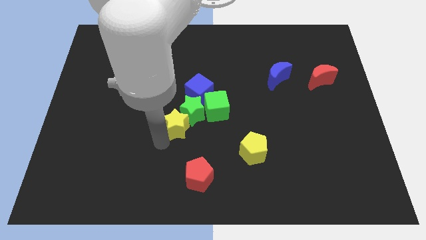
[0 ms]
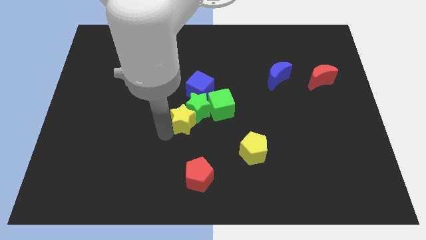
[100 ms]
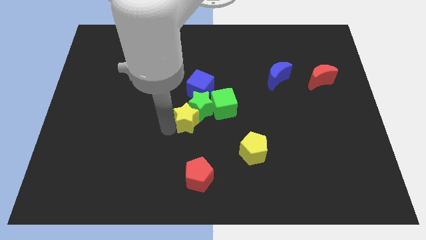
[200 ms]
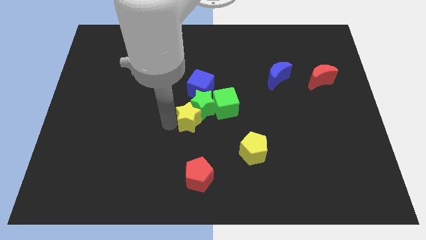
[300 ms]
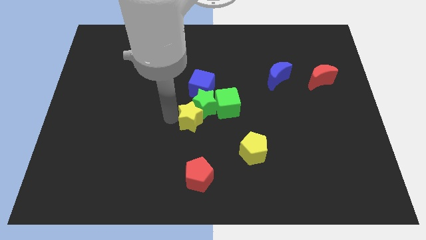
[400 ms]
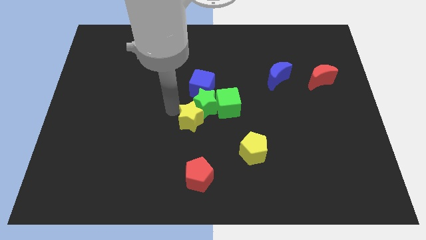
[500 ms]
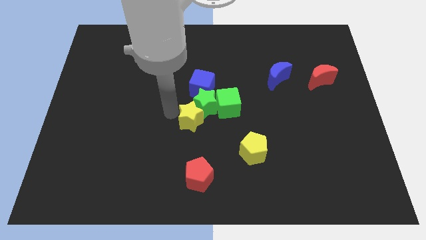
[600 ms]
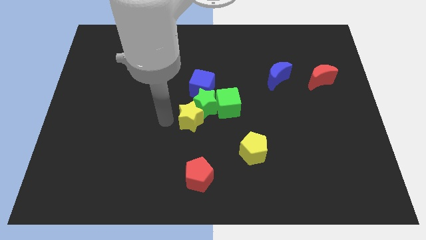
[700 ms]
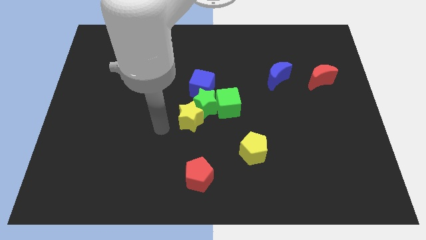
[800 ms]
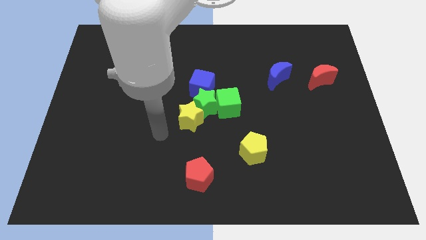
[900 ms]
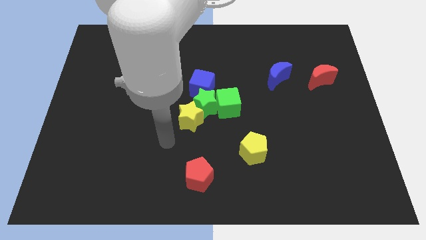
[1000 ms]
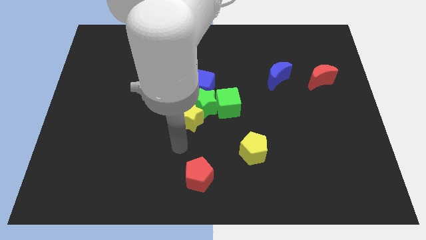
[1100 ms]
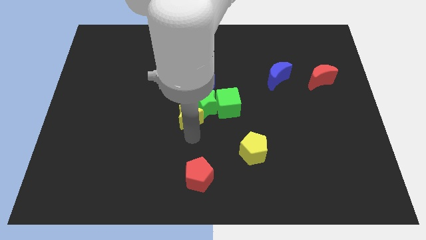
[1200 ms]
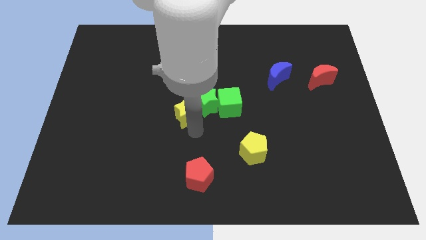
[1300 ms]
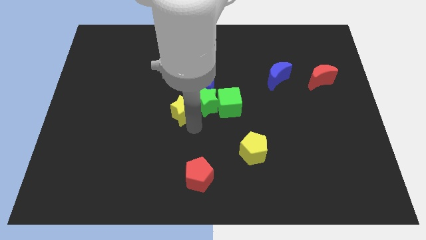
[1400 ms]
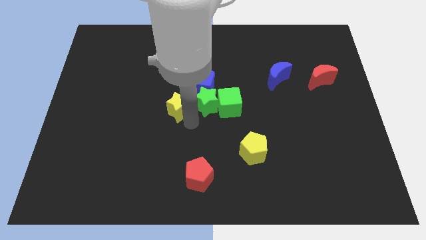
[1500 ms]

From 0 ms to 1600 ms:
push yellow star slightly upwards

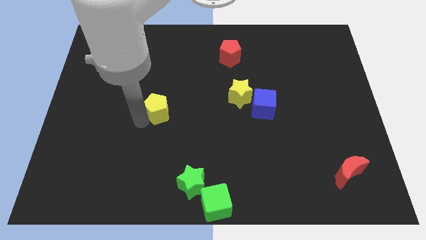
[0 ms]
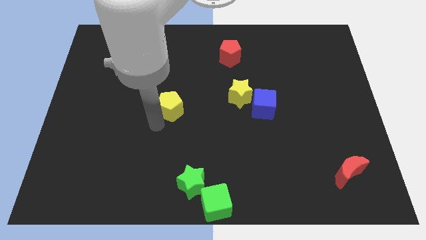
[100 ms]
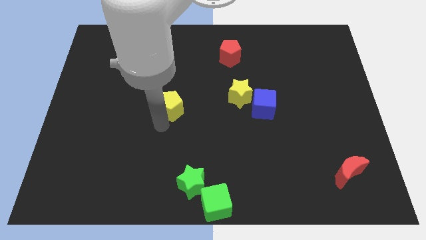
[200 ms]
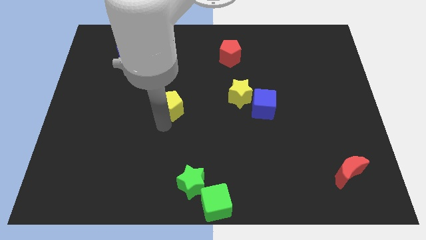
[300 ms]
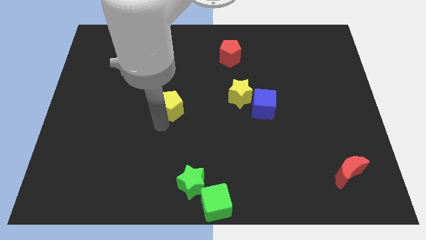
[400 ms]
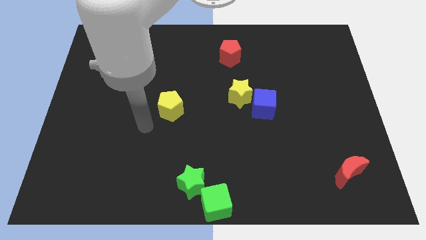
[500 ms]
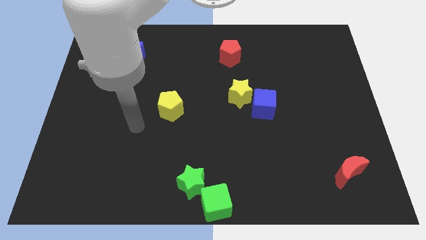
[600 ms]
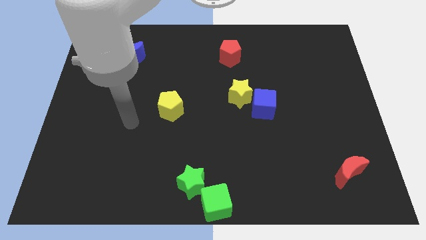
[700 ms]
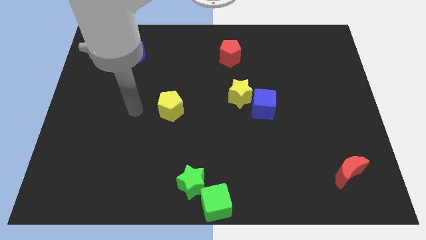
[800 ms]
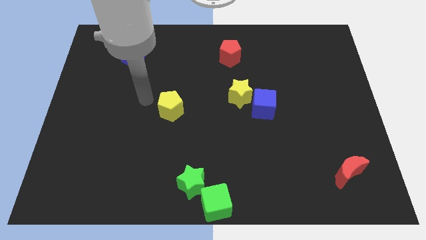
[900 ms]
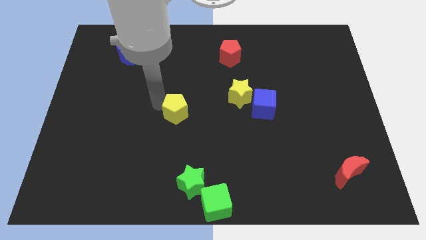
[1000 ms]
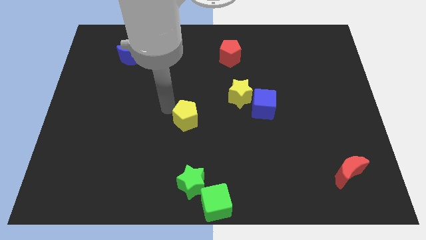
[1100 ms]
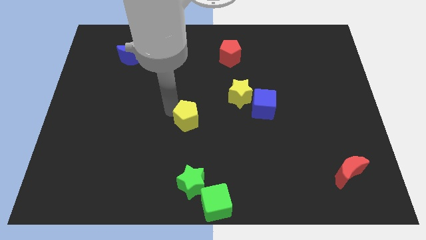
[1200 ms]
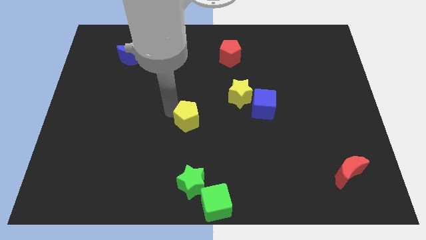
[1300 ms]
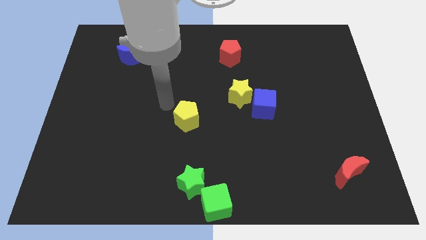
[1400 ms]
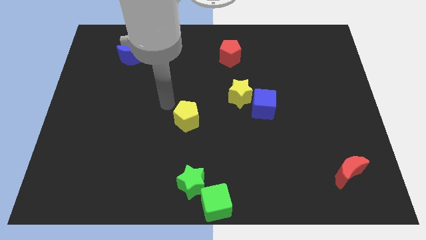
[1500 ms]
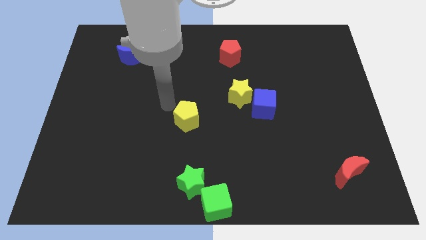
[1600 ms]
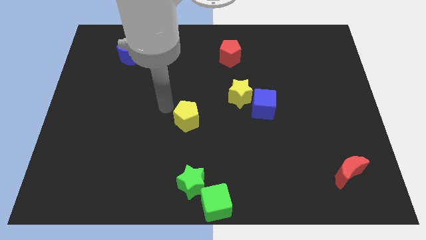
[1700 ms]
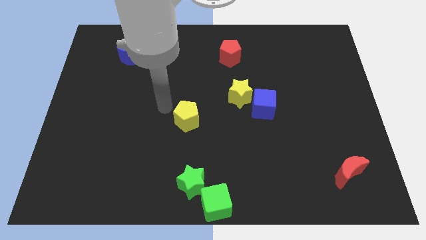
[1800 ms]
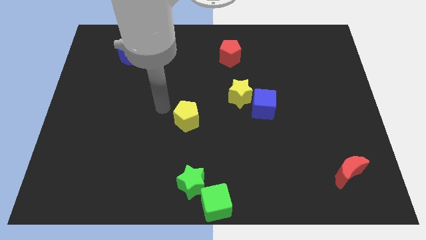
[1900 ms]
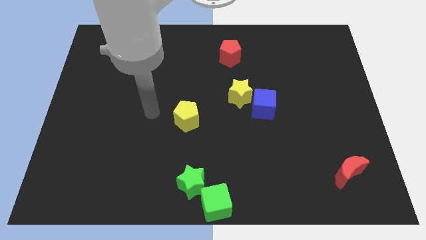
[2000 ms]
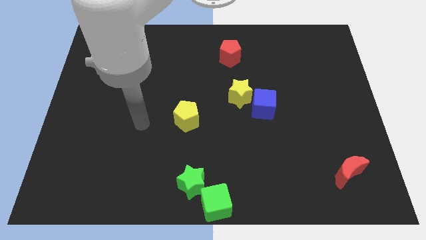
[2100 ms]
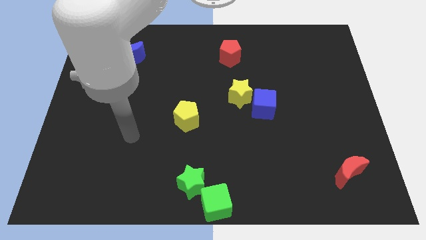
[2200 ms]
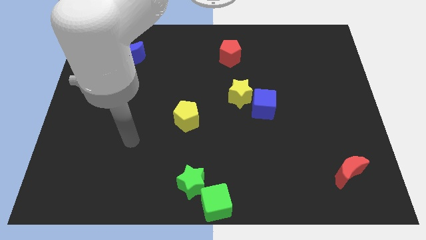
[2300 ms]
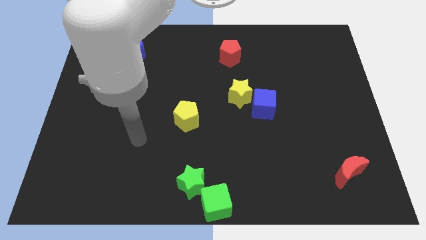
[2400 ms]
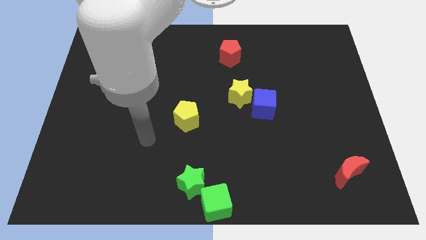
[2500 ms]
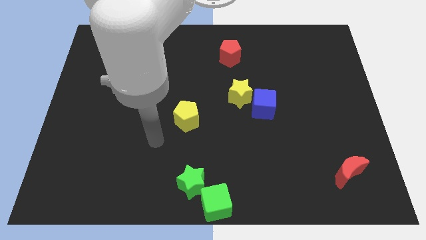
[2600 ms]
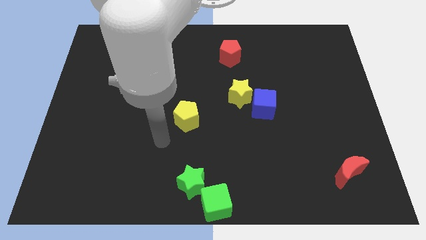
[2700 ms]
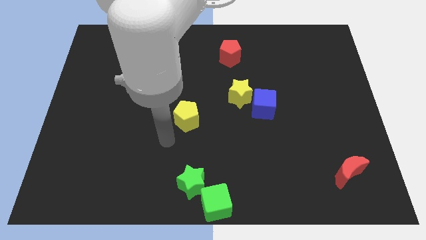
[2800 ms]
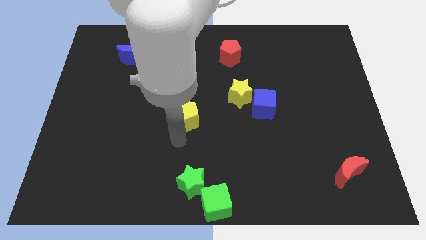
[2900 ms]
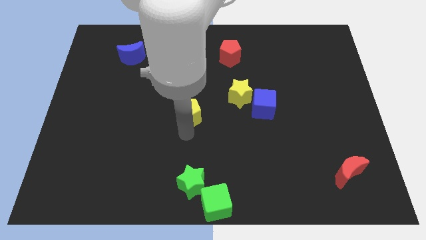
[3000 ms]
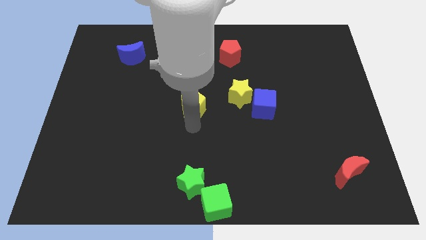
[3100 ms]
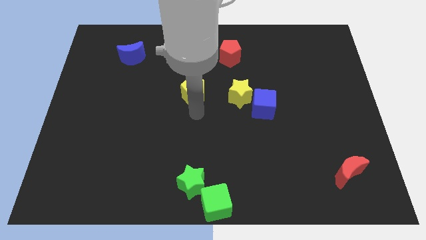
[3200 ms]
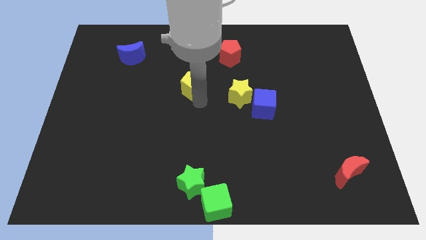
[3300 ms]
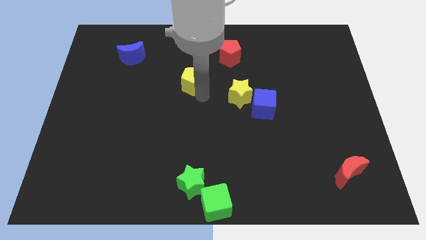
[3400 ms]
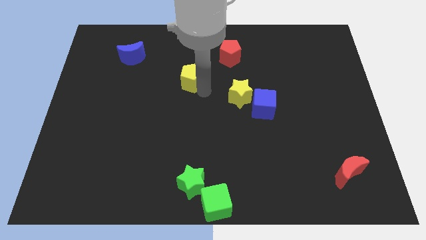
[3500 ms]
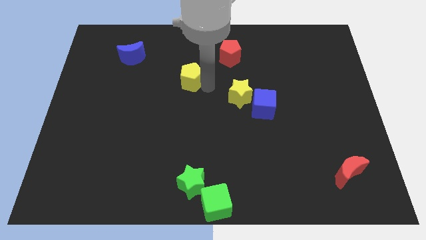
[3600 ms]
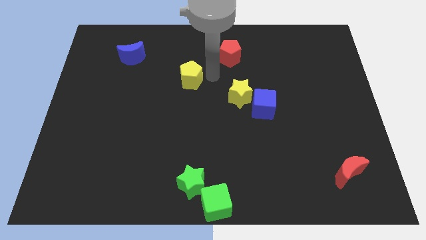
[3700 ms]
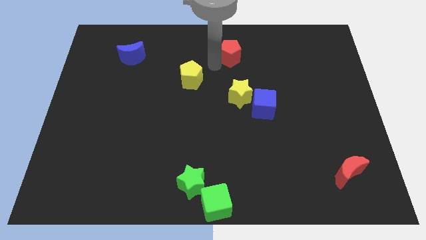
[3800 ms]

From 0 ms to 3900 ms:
move the pentagon to the top of the board

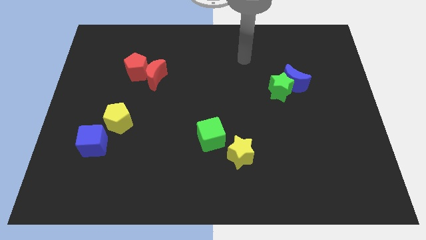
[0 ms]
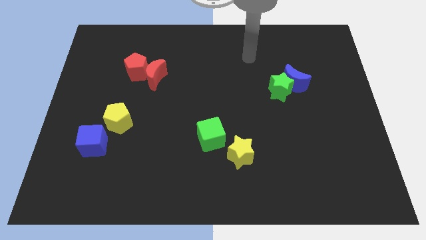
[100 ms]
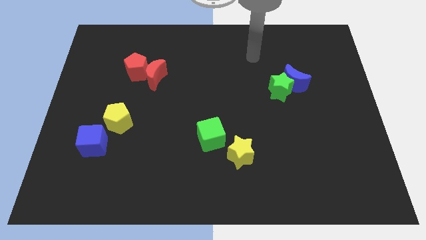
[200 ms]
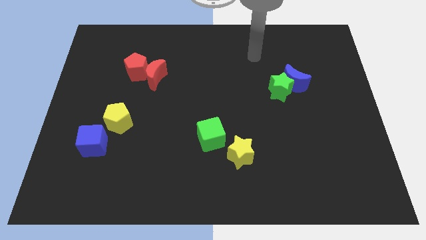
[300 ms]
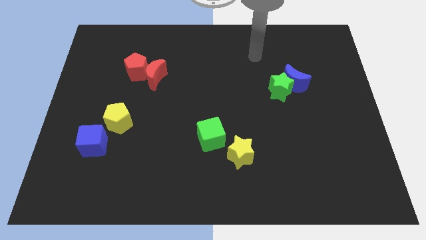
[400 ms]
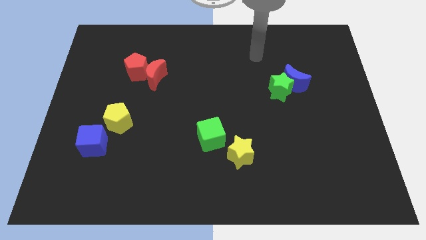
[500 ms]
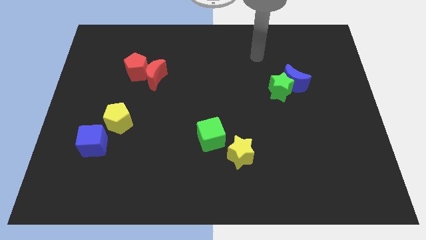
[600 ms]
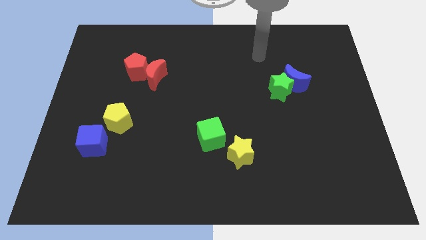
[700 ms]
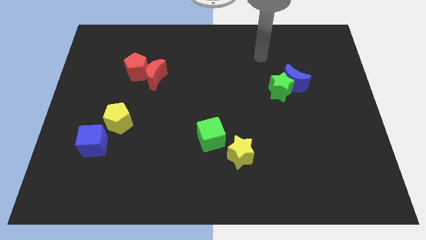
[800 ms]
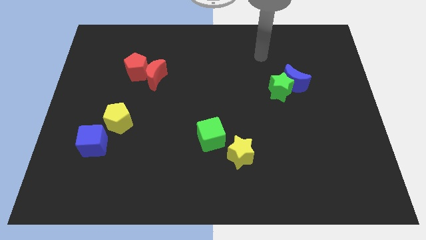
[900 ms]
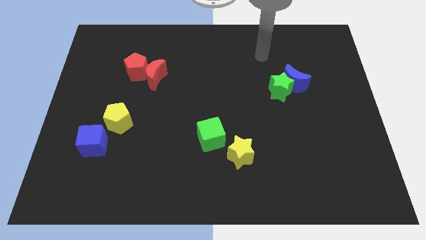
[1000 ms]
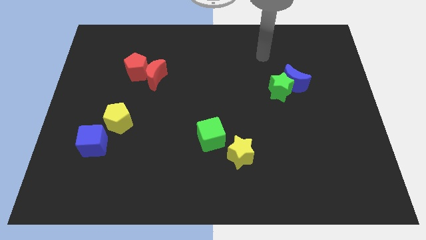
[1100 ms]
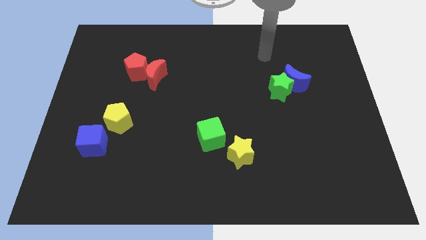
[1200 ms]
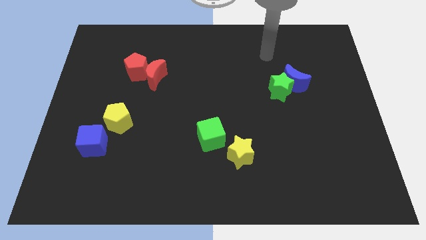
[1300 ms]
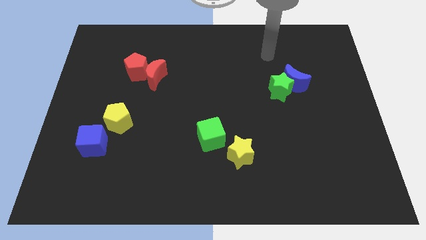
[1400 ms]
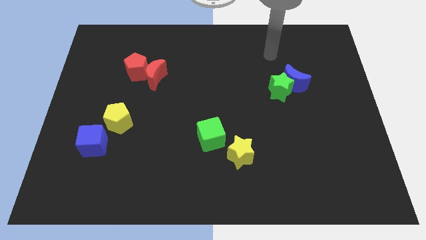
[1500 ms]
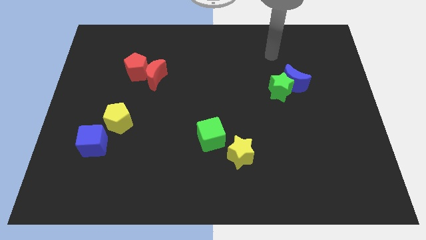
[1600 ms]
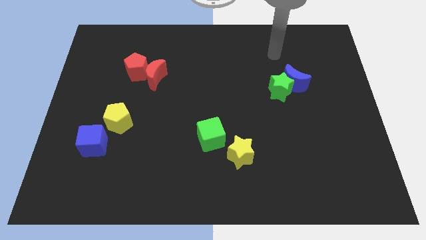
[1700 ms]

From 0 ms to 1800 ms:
point your arm at the top of the green star

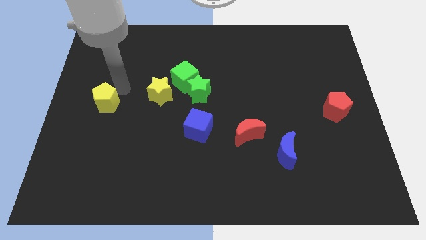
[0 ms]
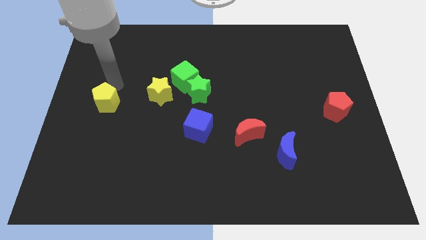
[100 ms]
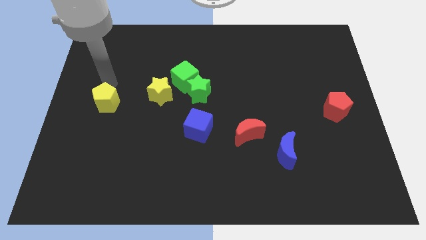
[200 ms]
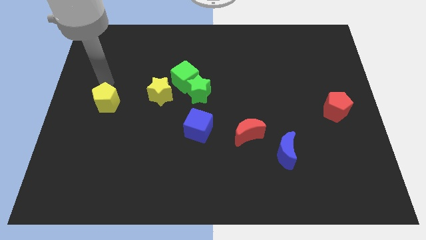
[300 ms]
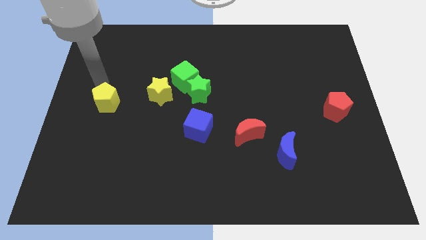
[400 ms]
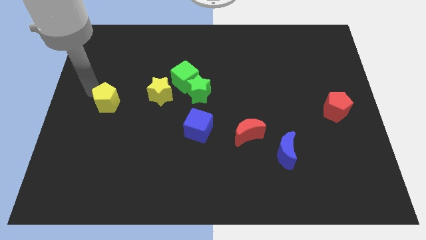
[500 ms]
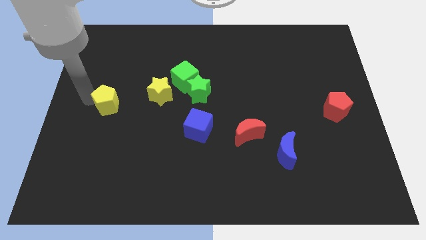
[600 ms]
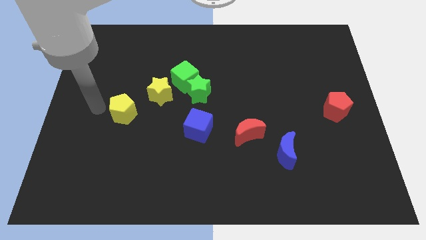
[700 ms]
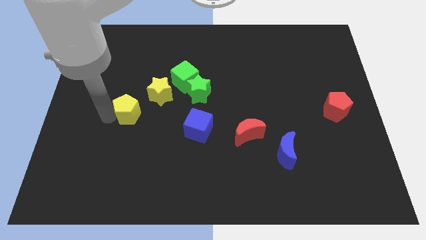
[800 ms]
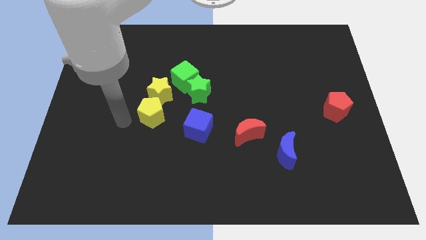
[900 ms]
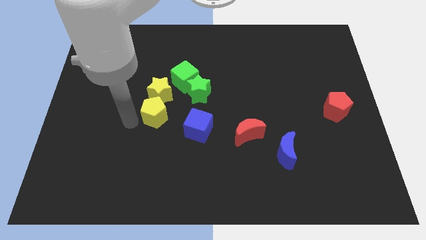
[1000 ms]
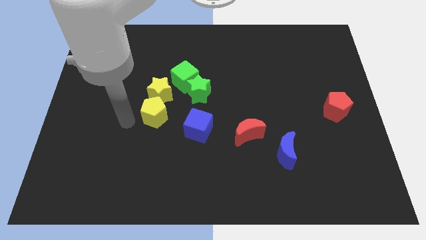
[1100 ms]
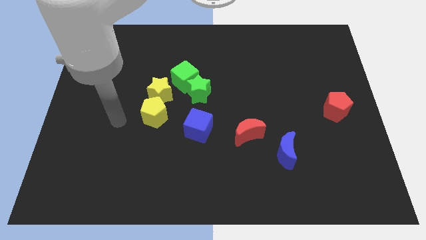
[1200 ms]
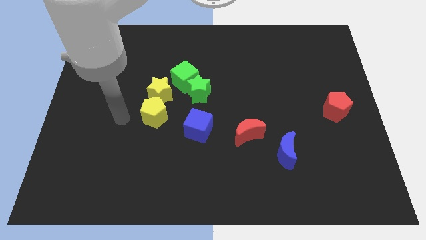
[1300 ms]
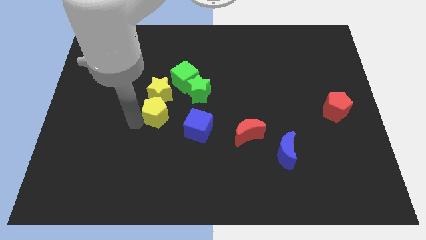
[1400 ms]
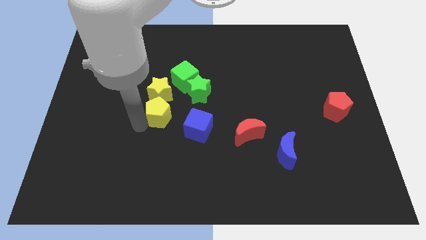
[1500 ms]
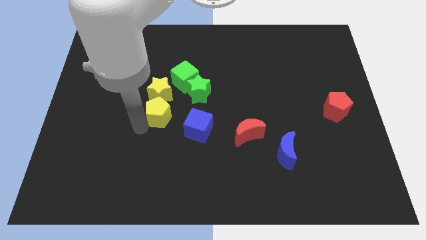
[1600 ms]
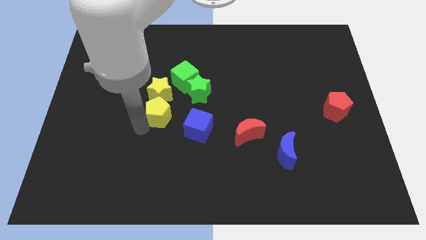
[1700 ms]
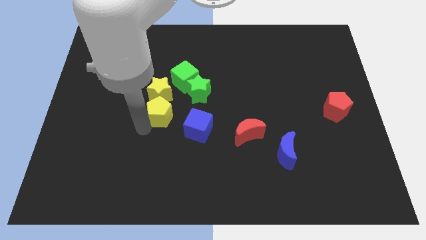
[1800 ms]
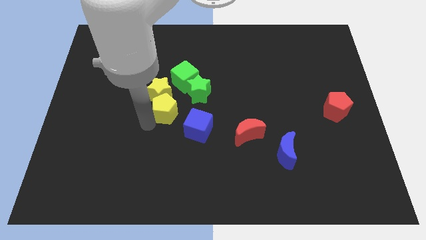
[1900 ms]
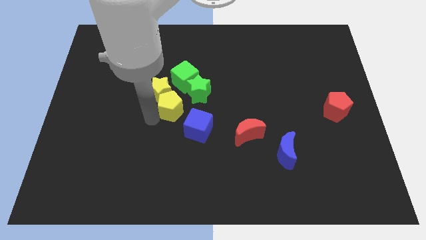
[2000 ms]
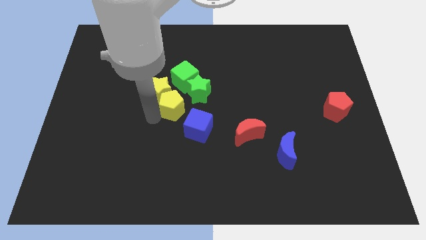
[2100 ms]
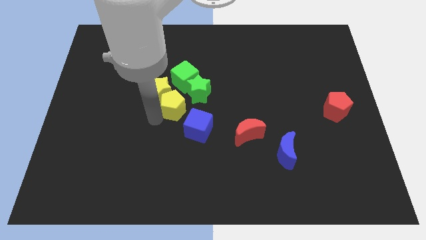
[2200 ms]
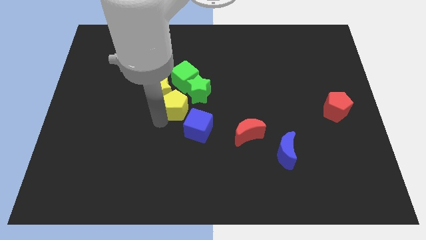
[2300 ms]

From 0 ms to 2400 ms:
place the yellow pentagon to the left of the green star
